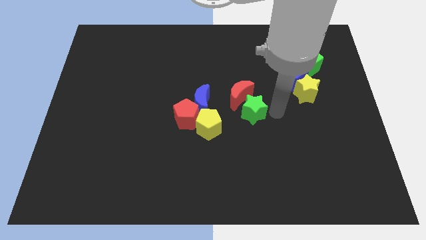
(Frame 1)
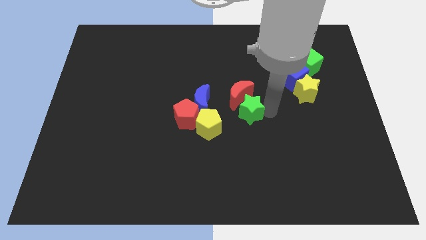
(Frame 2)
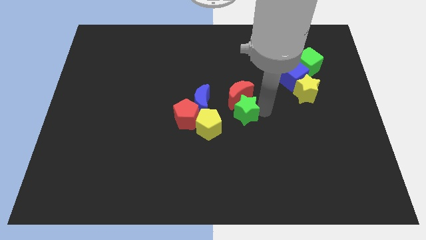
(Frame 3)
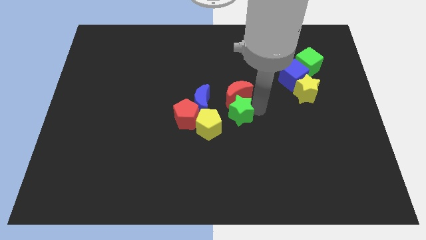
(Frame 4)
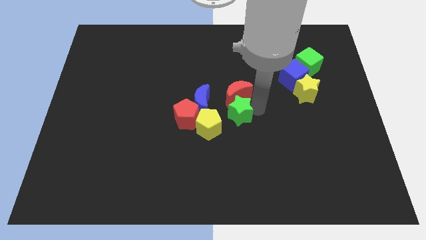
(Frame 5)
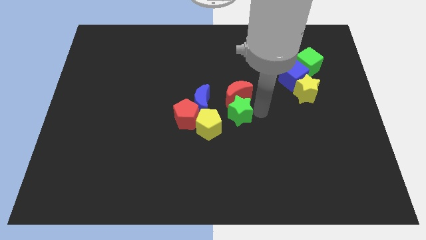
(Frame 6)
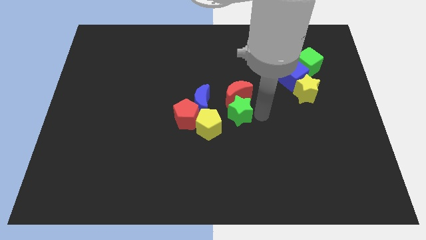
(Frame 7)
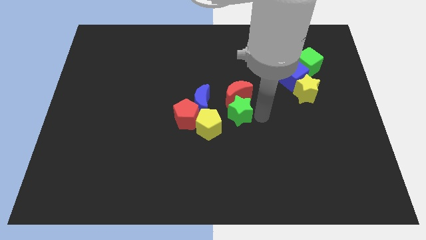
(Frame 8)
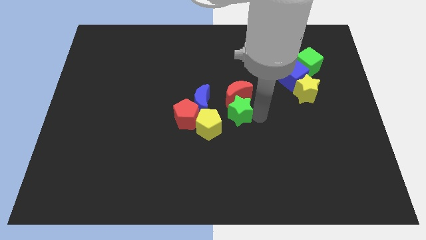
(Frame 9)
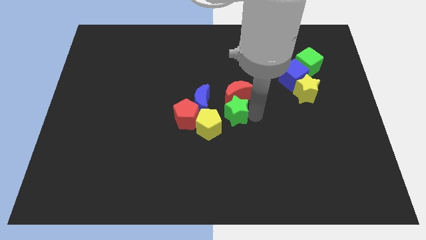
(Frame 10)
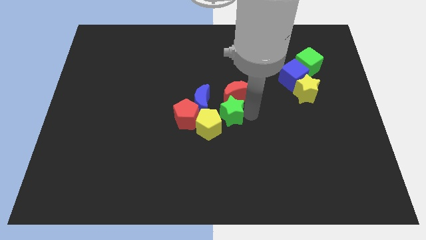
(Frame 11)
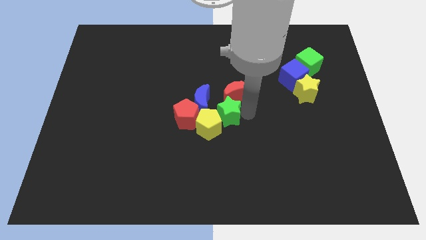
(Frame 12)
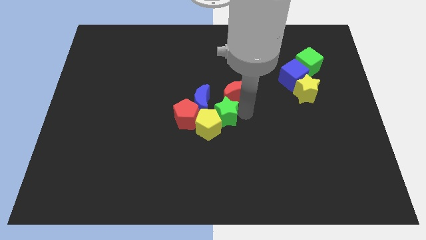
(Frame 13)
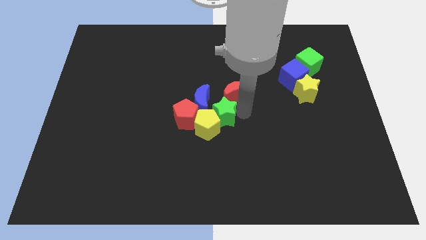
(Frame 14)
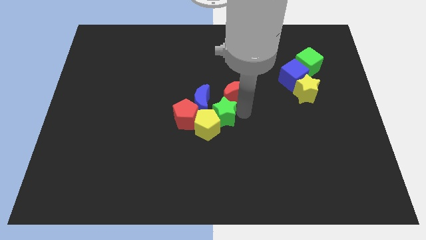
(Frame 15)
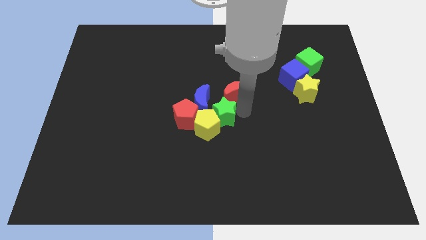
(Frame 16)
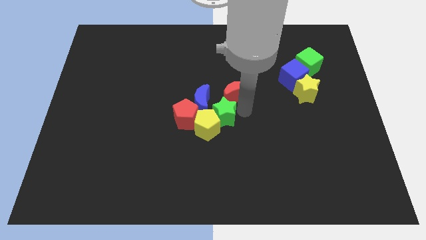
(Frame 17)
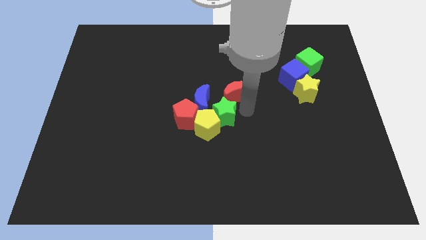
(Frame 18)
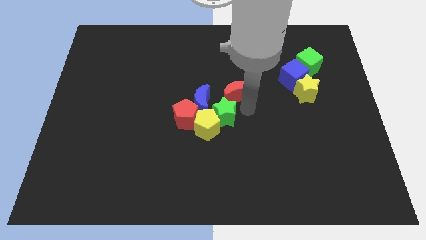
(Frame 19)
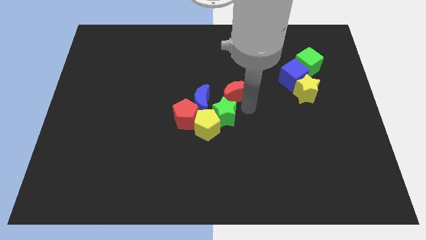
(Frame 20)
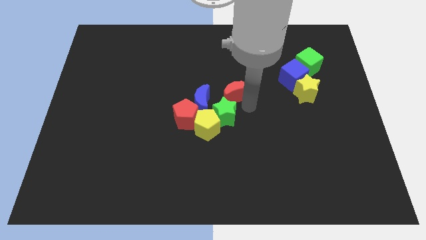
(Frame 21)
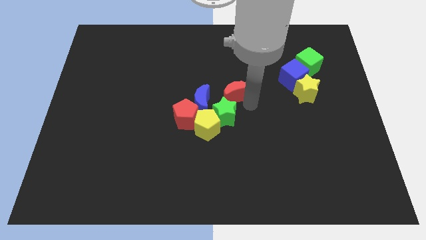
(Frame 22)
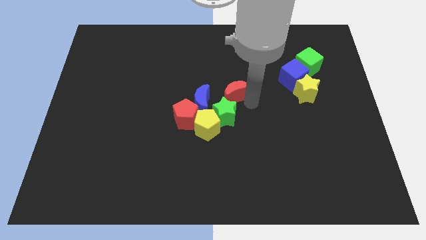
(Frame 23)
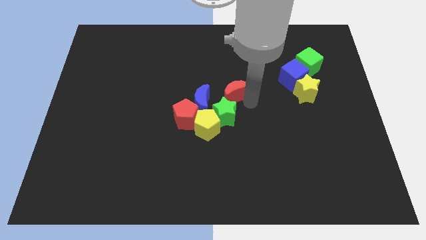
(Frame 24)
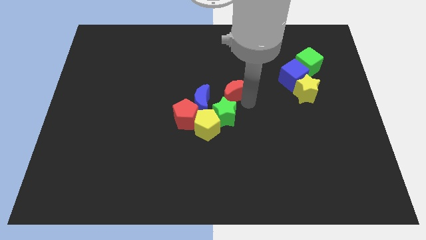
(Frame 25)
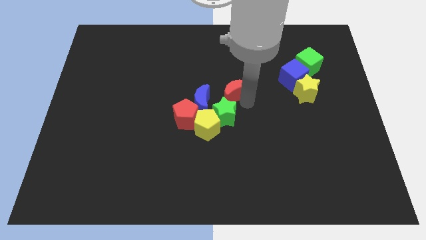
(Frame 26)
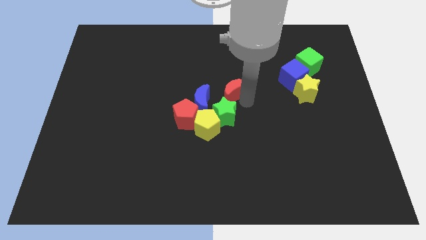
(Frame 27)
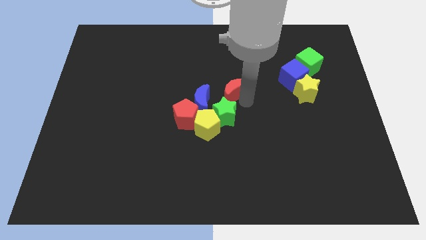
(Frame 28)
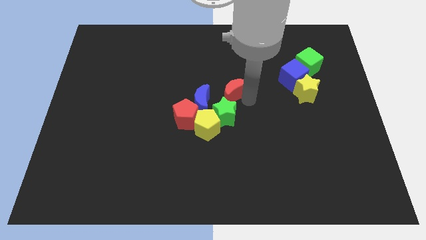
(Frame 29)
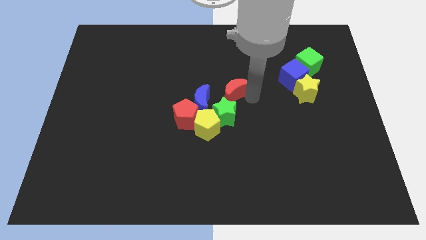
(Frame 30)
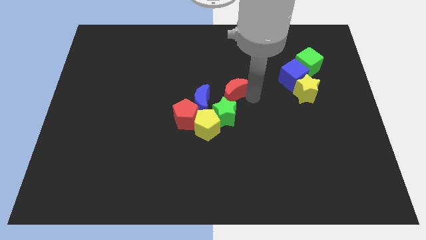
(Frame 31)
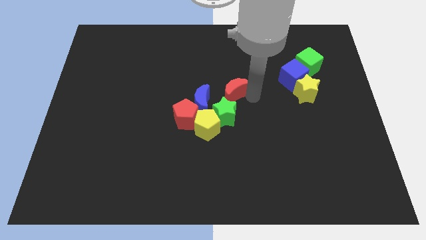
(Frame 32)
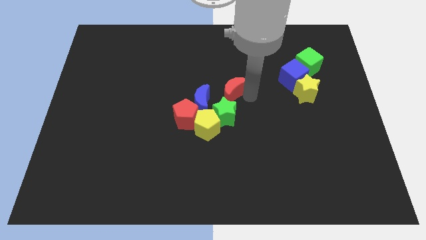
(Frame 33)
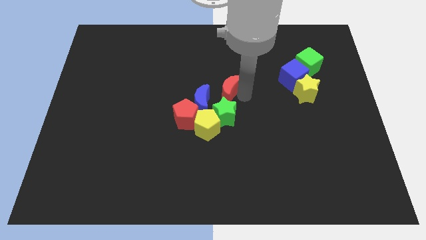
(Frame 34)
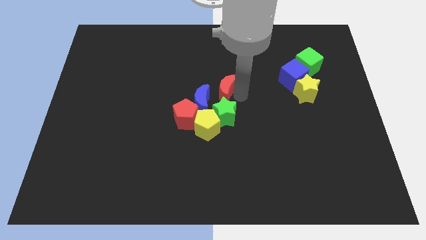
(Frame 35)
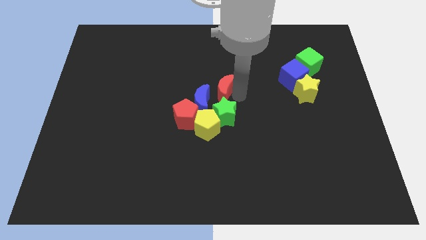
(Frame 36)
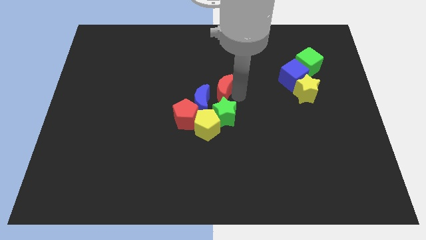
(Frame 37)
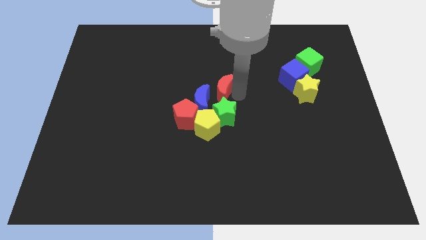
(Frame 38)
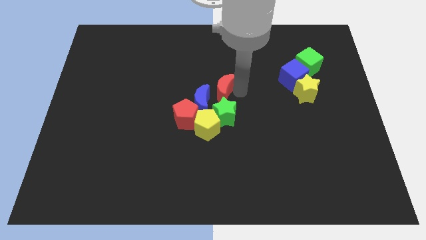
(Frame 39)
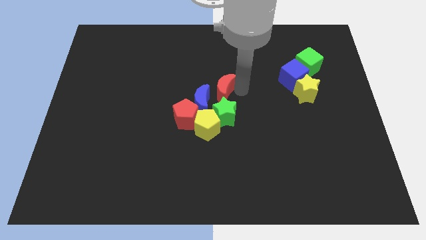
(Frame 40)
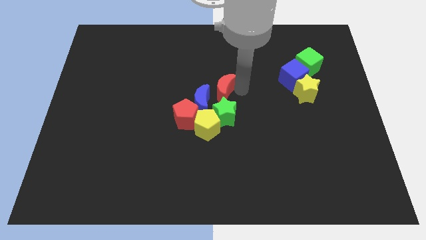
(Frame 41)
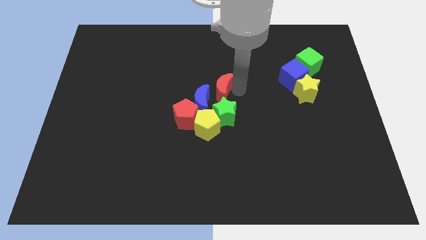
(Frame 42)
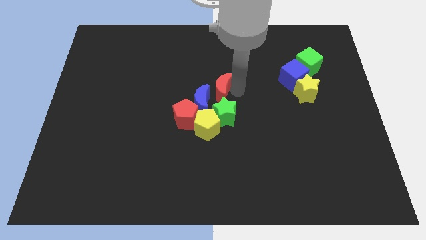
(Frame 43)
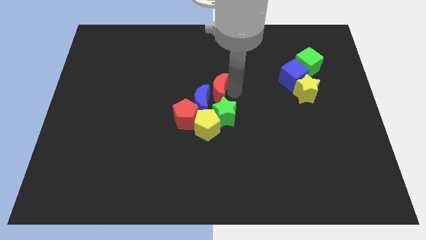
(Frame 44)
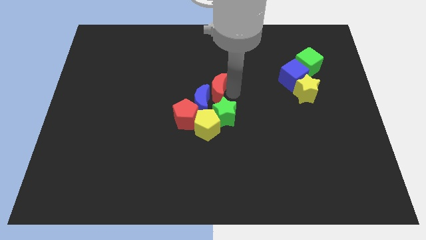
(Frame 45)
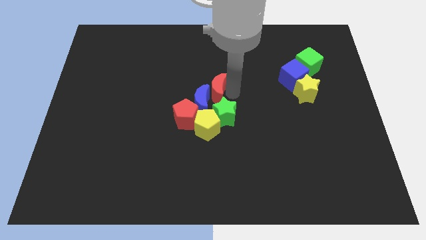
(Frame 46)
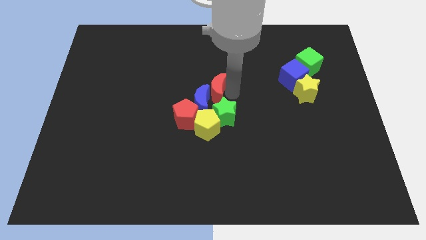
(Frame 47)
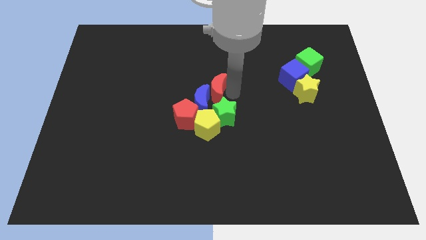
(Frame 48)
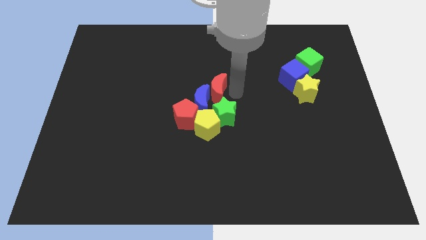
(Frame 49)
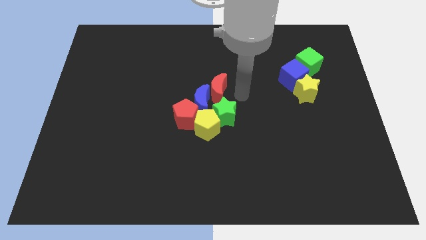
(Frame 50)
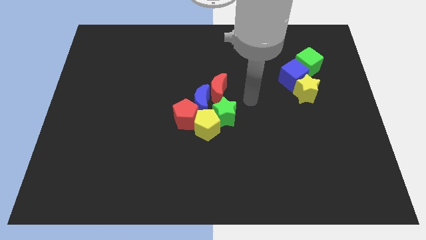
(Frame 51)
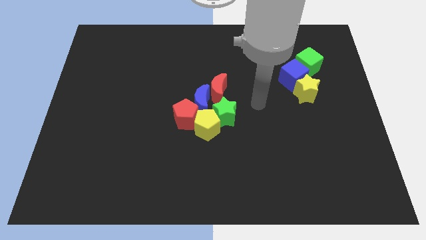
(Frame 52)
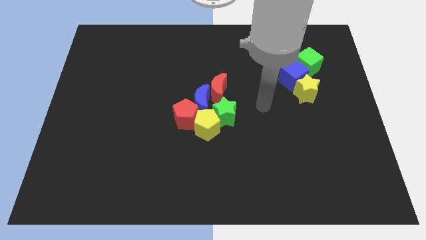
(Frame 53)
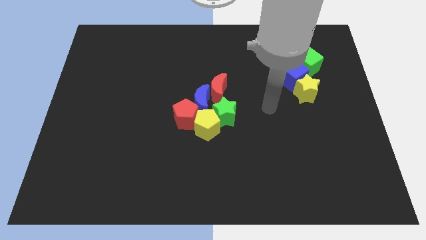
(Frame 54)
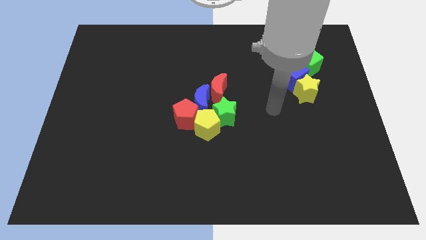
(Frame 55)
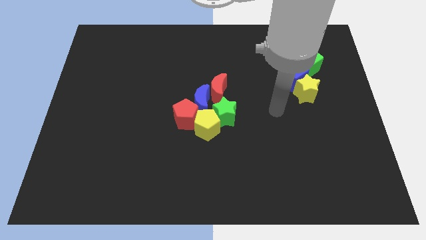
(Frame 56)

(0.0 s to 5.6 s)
move the green star and the red crescent to the center of the board

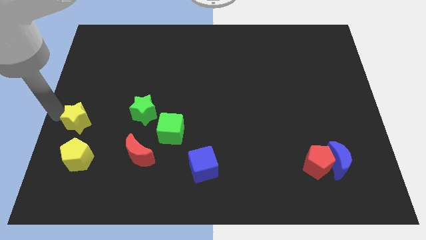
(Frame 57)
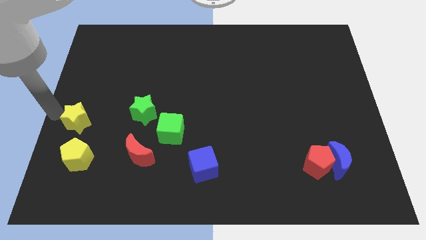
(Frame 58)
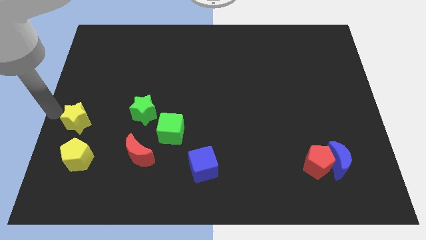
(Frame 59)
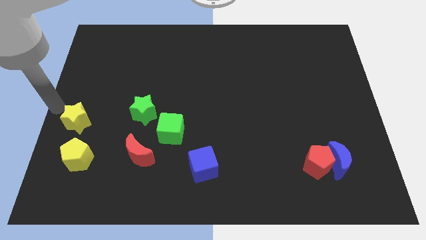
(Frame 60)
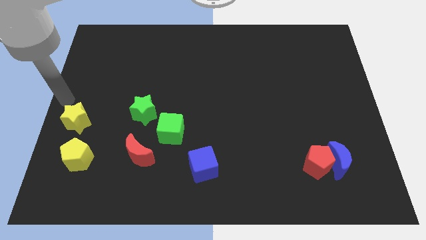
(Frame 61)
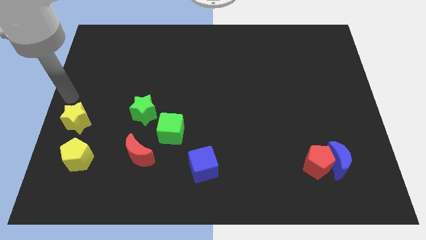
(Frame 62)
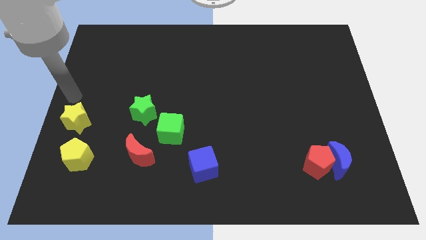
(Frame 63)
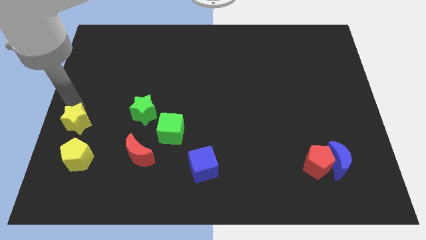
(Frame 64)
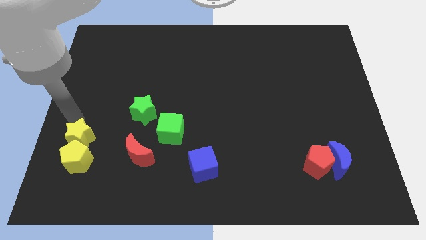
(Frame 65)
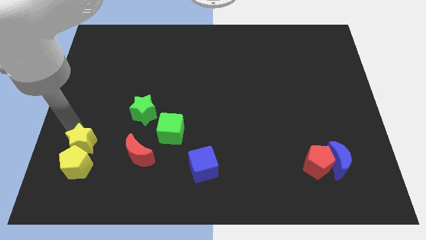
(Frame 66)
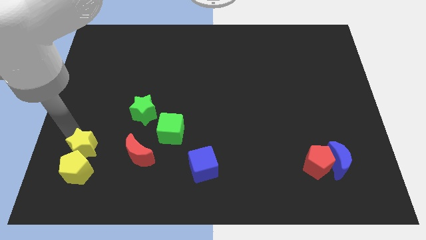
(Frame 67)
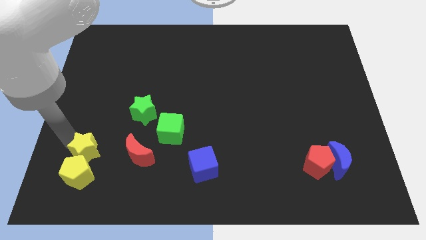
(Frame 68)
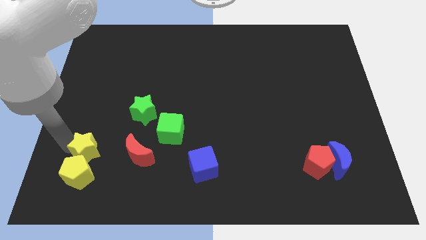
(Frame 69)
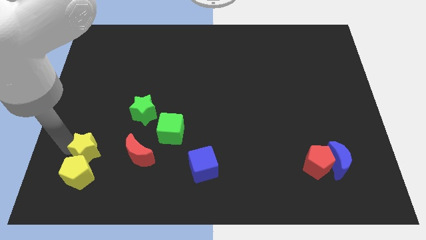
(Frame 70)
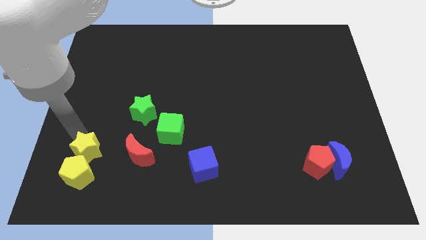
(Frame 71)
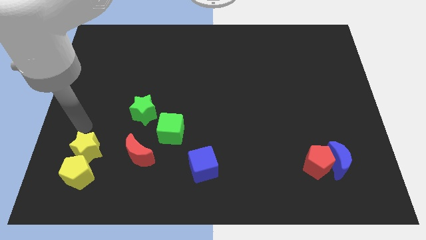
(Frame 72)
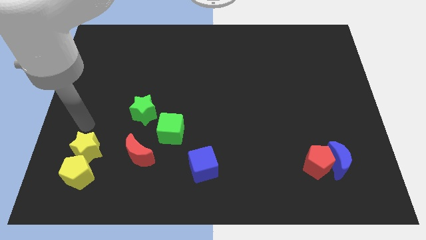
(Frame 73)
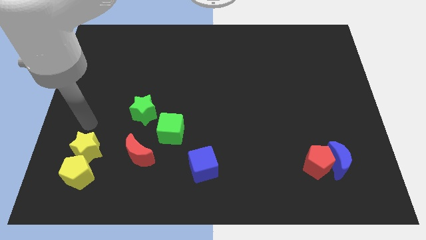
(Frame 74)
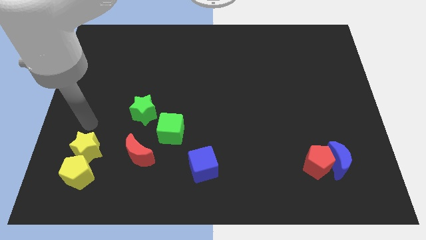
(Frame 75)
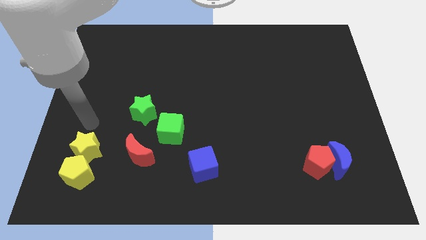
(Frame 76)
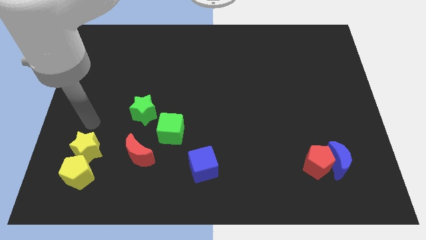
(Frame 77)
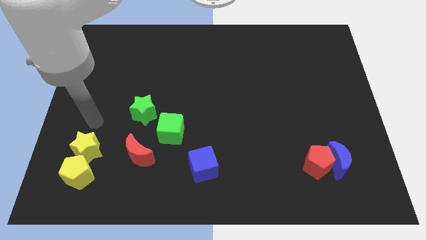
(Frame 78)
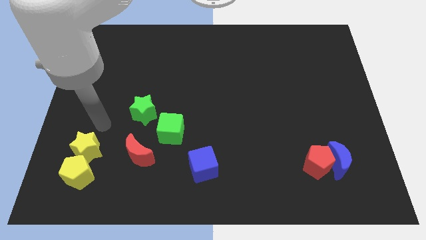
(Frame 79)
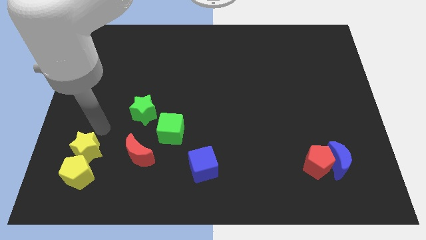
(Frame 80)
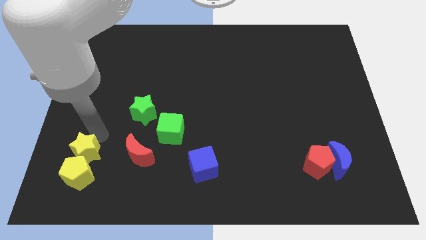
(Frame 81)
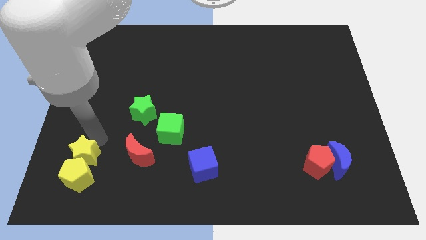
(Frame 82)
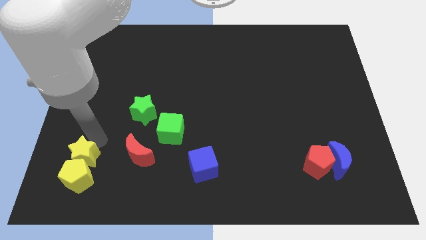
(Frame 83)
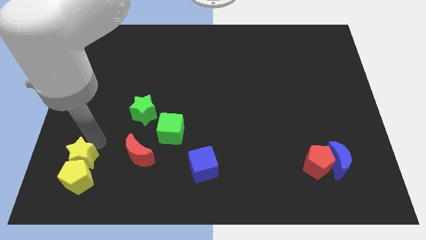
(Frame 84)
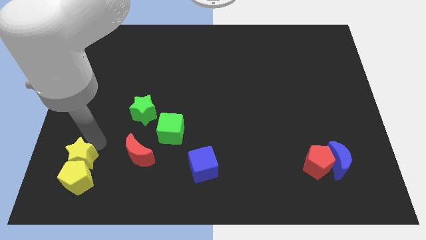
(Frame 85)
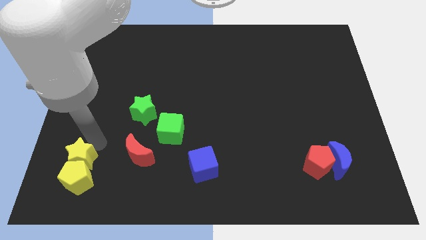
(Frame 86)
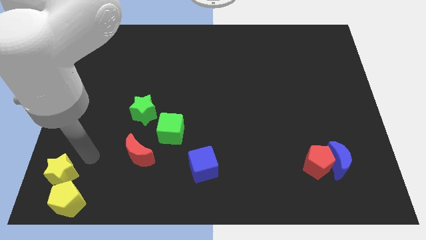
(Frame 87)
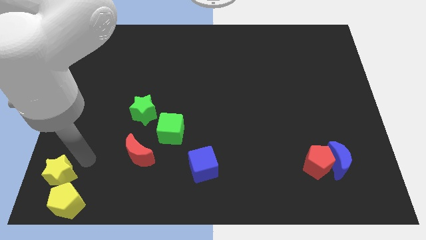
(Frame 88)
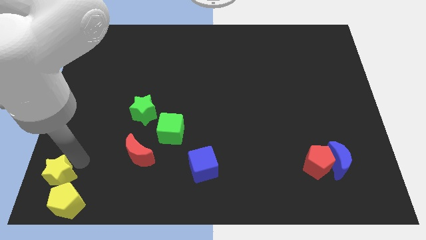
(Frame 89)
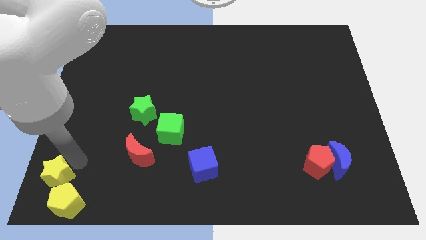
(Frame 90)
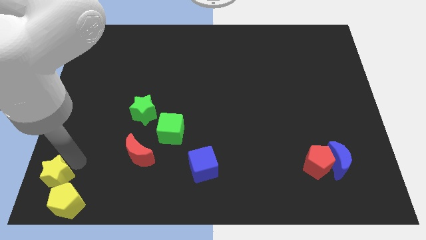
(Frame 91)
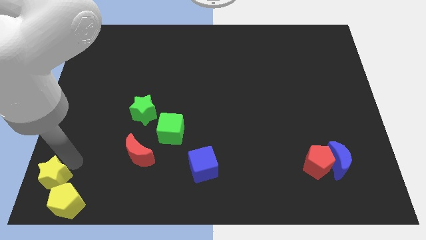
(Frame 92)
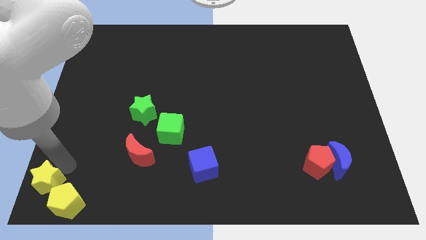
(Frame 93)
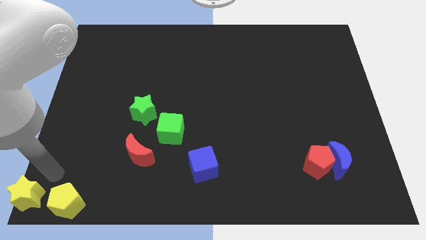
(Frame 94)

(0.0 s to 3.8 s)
move the yellow blocks to the bottom left side
